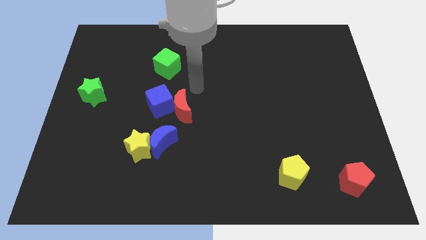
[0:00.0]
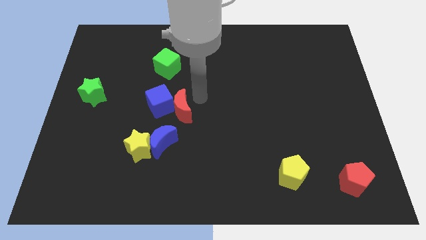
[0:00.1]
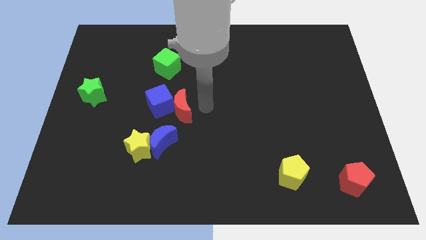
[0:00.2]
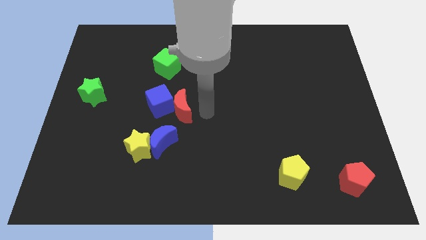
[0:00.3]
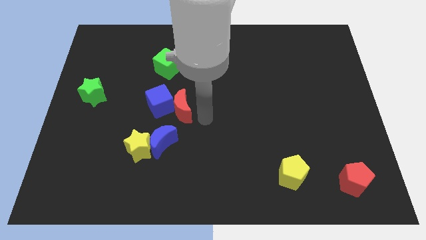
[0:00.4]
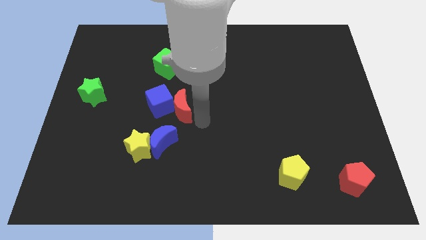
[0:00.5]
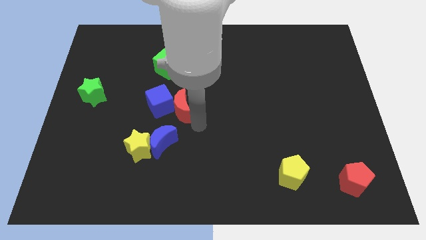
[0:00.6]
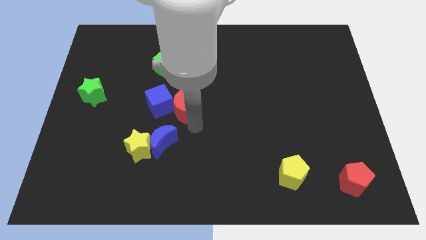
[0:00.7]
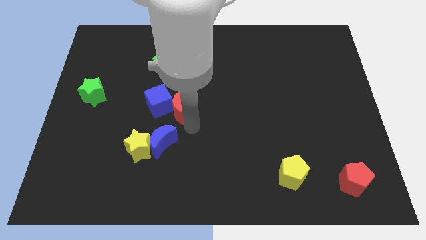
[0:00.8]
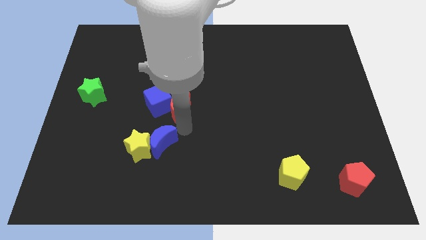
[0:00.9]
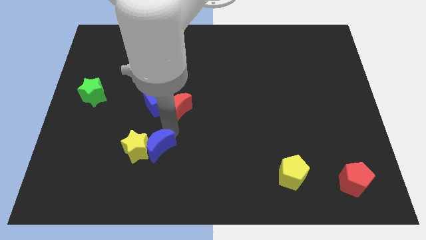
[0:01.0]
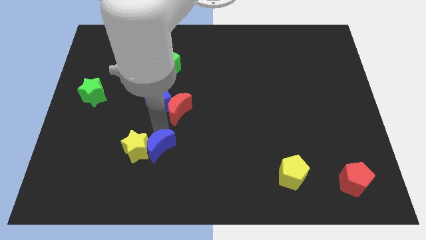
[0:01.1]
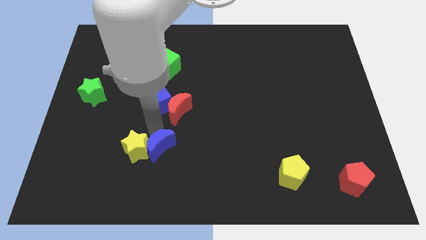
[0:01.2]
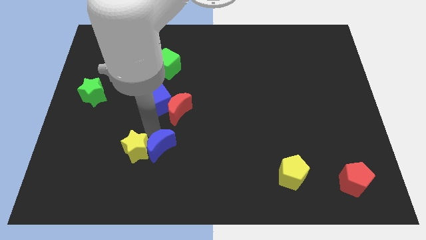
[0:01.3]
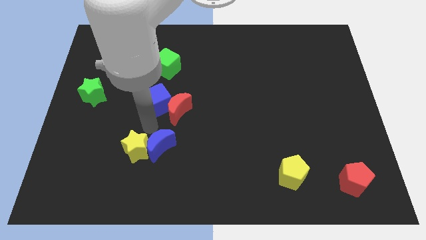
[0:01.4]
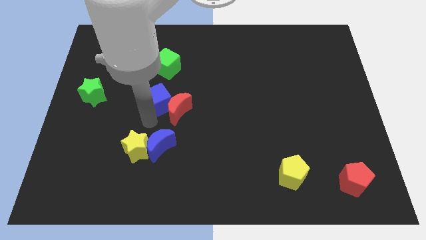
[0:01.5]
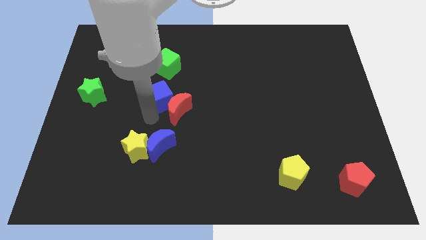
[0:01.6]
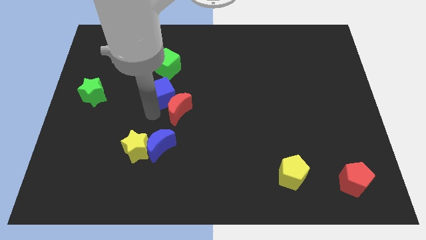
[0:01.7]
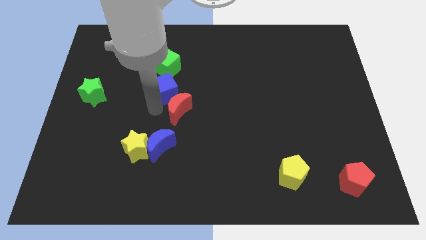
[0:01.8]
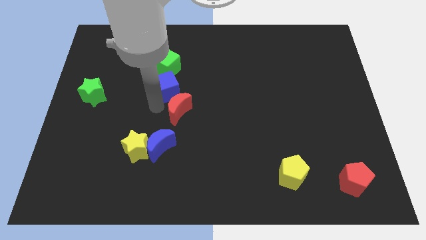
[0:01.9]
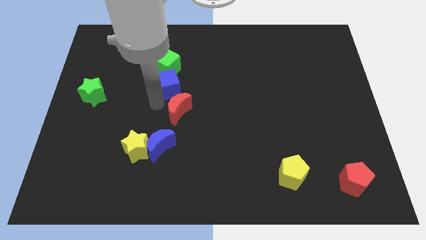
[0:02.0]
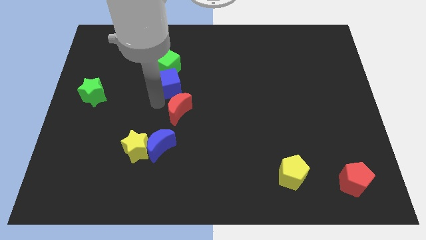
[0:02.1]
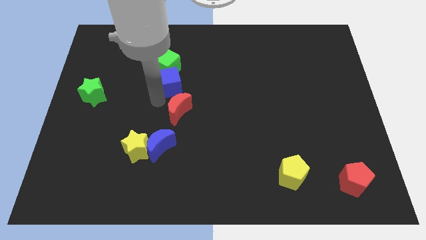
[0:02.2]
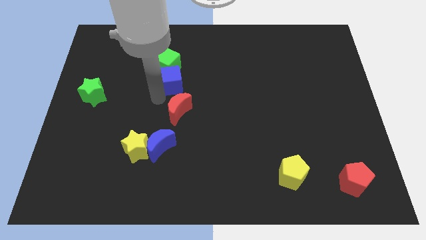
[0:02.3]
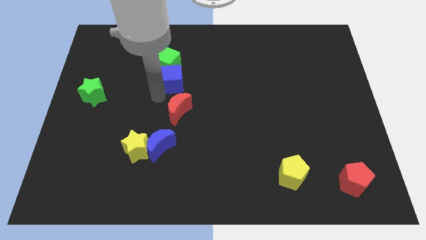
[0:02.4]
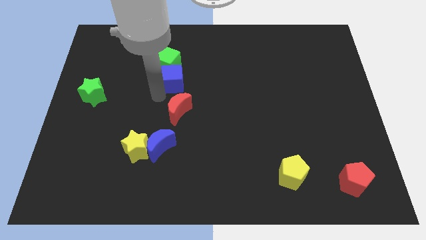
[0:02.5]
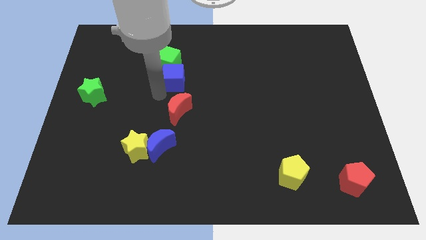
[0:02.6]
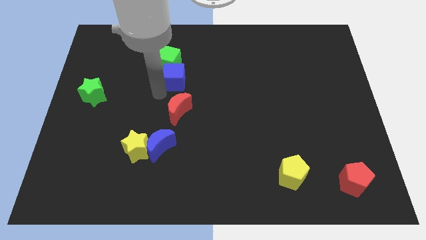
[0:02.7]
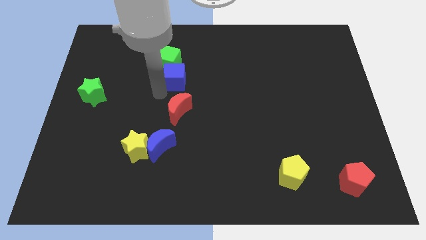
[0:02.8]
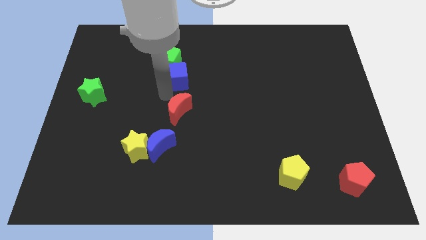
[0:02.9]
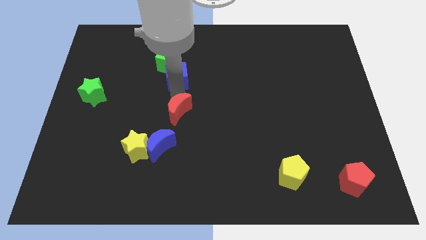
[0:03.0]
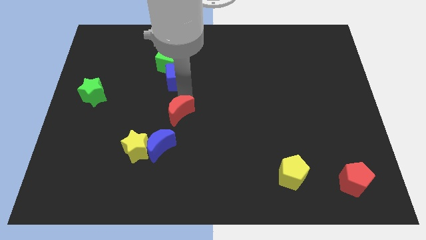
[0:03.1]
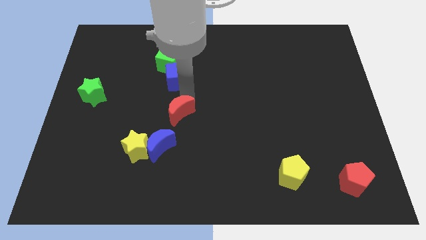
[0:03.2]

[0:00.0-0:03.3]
push the blue cube into the green cube

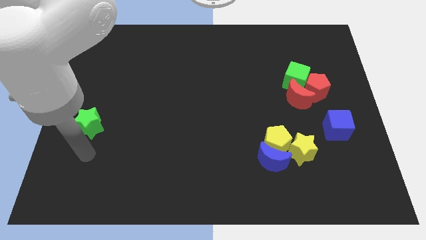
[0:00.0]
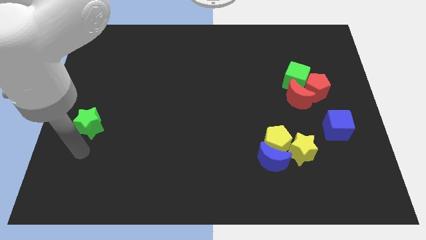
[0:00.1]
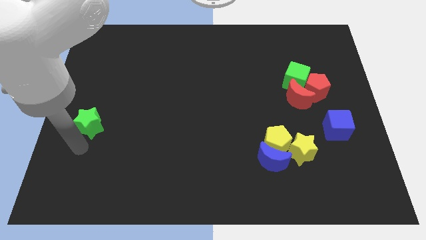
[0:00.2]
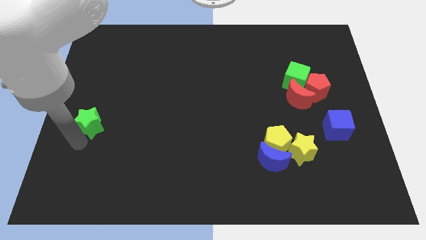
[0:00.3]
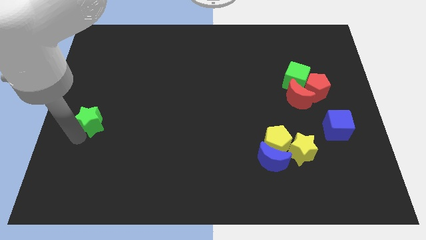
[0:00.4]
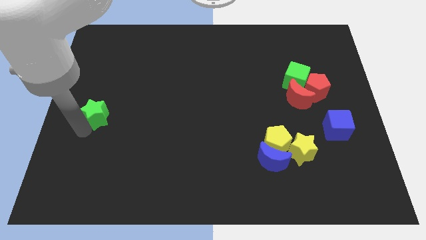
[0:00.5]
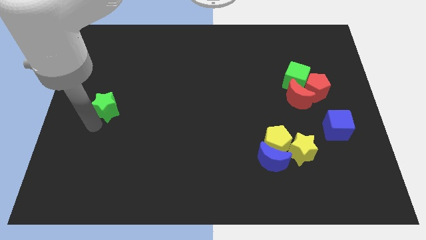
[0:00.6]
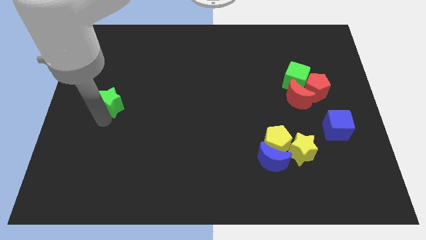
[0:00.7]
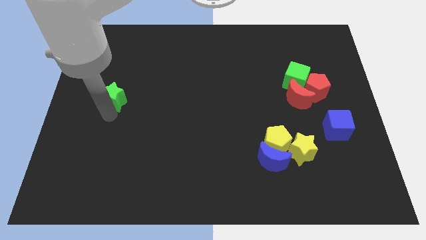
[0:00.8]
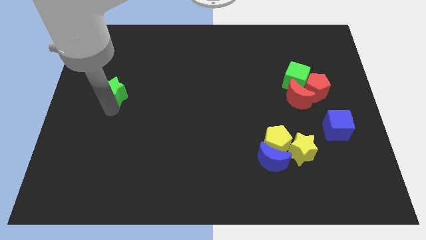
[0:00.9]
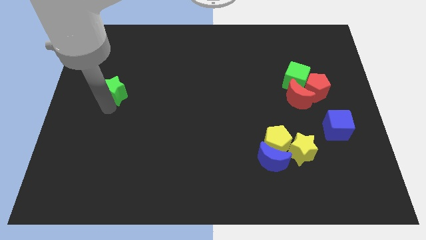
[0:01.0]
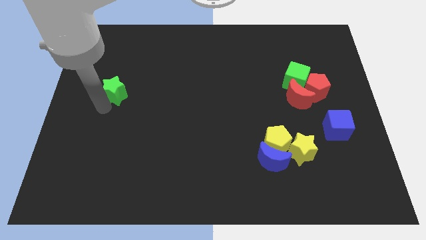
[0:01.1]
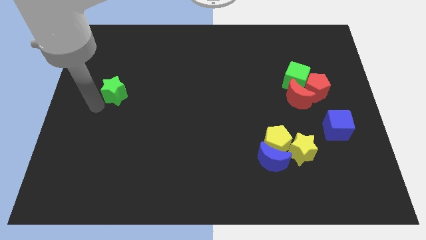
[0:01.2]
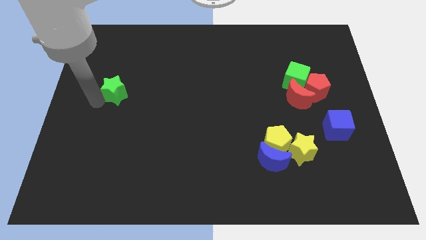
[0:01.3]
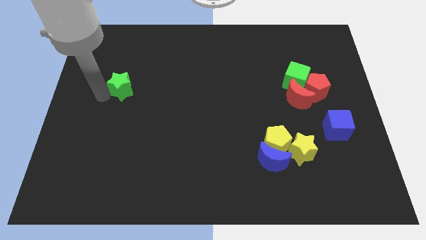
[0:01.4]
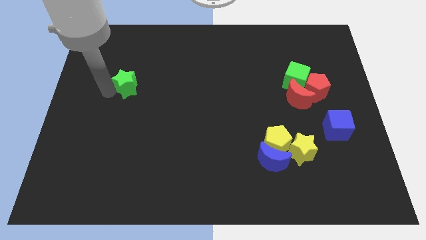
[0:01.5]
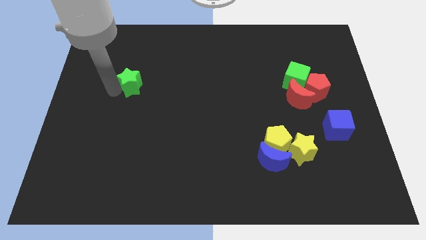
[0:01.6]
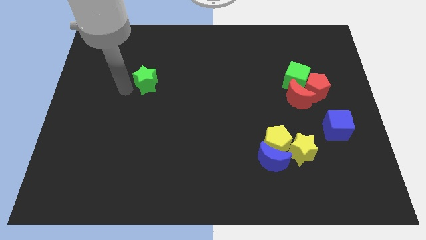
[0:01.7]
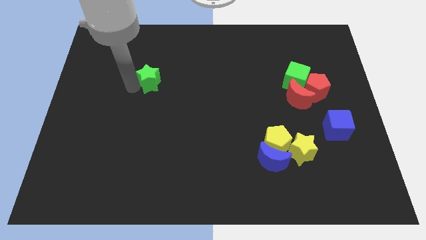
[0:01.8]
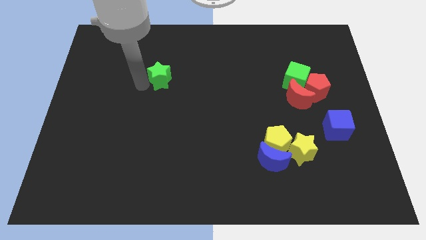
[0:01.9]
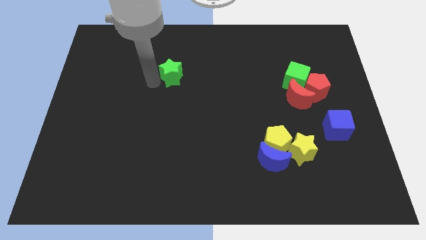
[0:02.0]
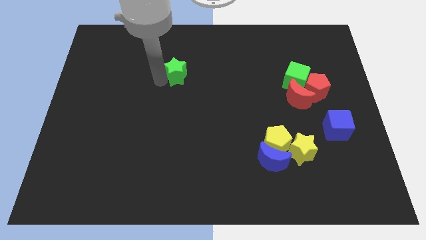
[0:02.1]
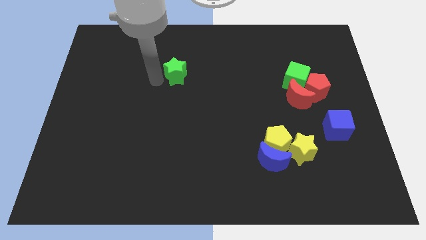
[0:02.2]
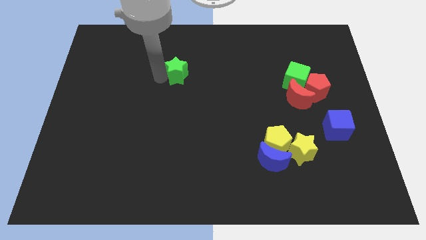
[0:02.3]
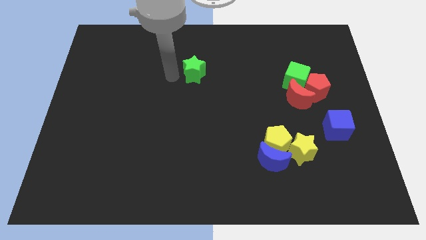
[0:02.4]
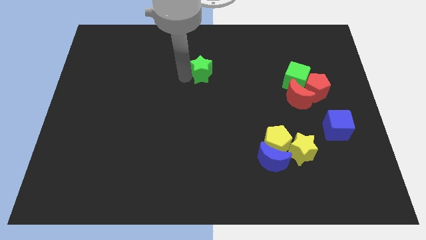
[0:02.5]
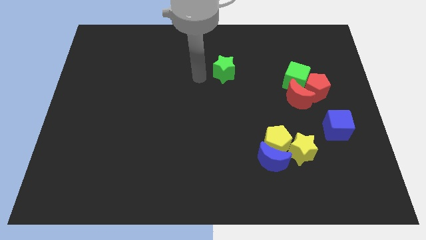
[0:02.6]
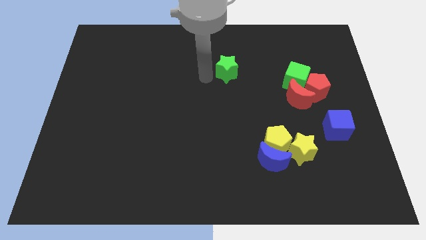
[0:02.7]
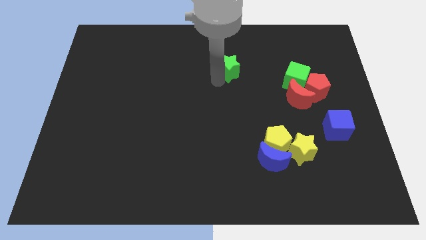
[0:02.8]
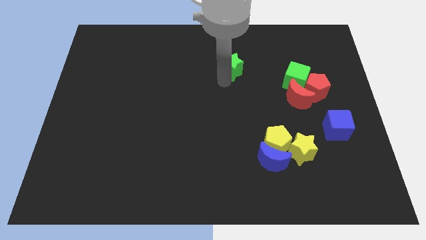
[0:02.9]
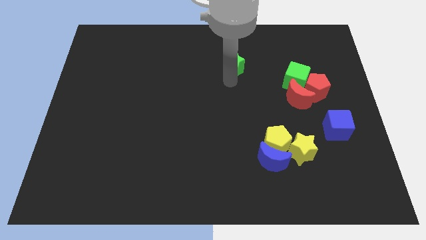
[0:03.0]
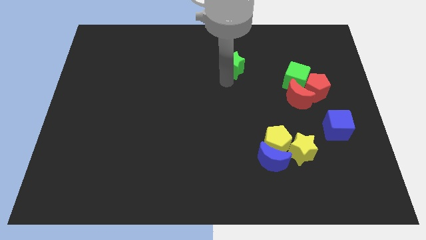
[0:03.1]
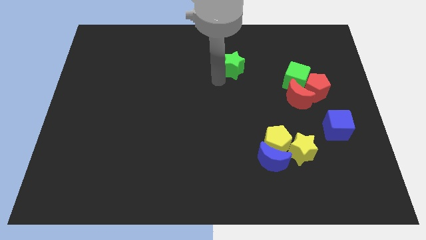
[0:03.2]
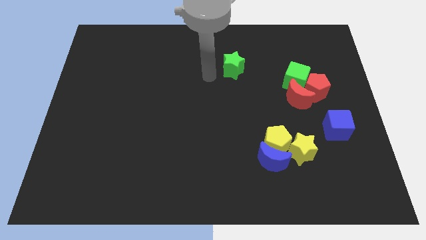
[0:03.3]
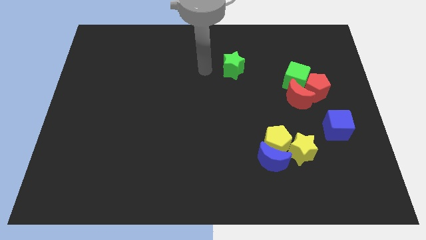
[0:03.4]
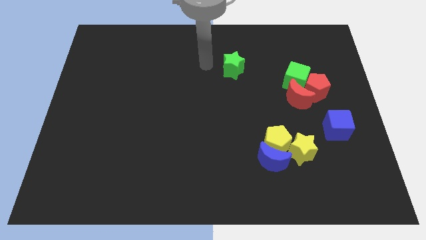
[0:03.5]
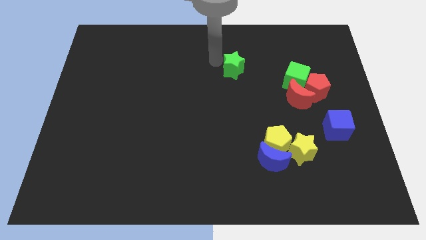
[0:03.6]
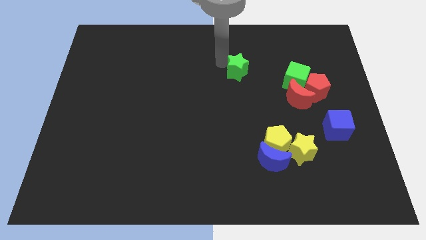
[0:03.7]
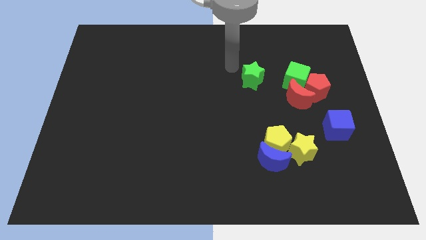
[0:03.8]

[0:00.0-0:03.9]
slide the green star to the left of the green cube

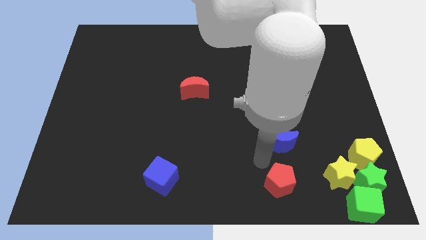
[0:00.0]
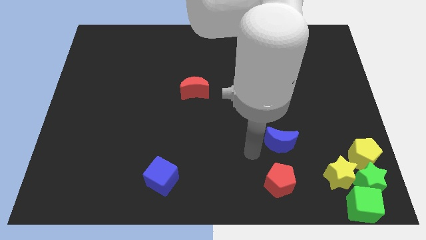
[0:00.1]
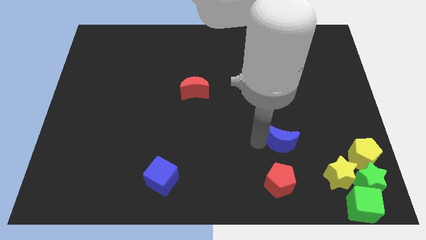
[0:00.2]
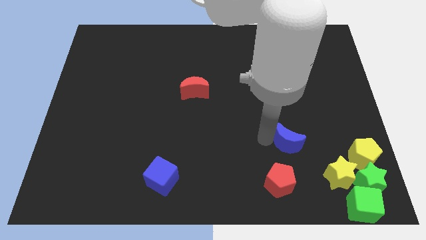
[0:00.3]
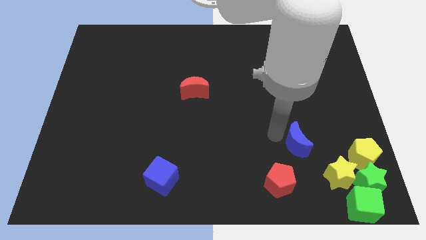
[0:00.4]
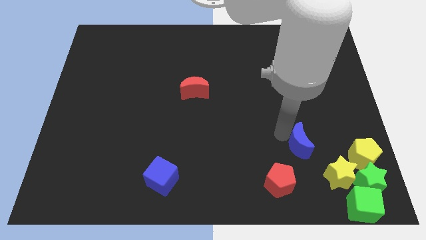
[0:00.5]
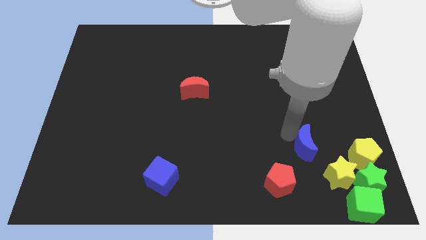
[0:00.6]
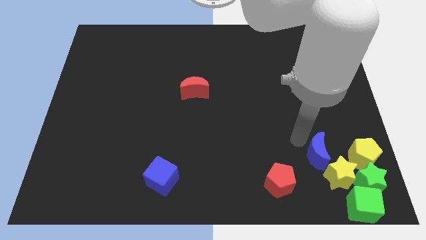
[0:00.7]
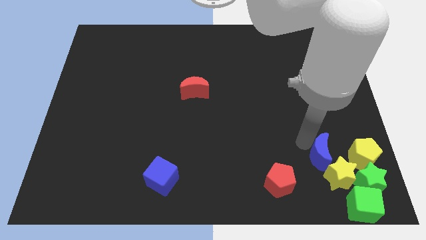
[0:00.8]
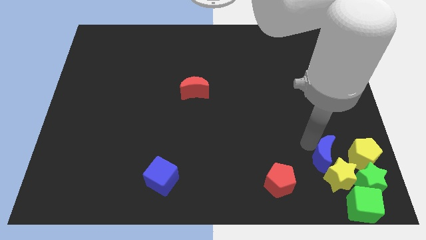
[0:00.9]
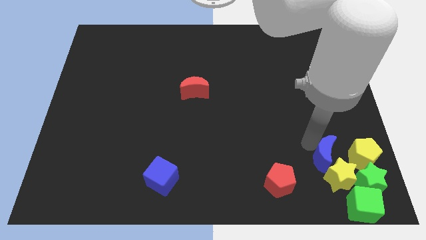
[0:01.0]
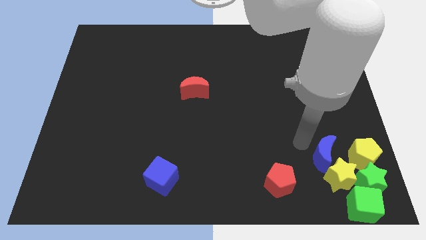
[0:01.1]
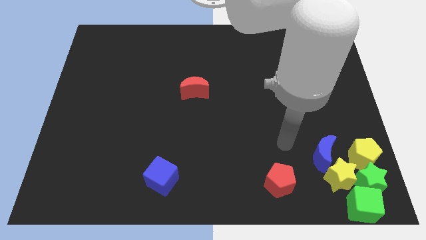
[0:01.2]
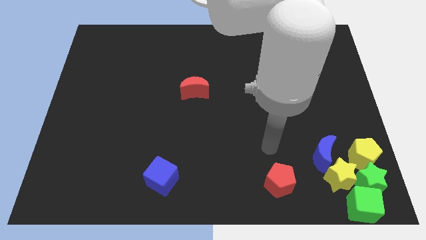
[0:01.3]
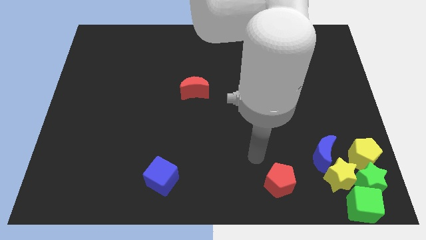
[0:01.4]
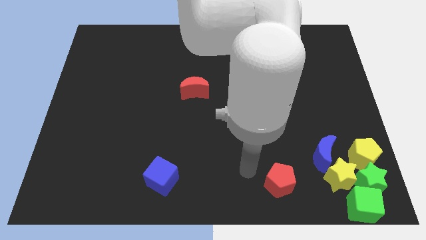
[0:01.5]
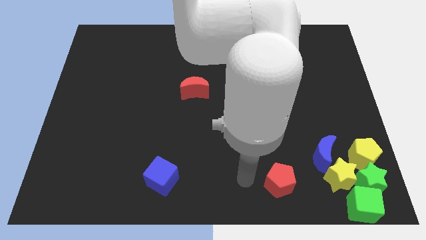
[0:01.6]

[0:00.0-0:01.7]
place blue crescent to the top of yellow star
